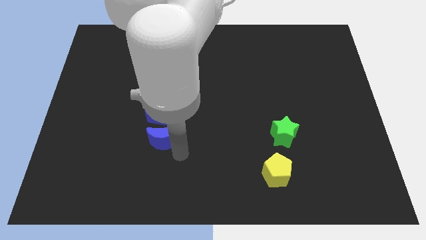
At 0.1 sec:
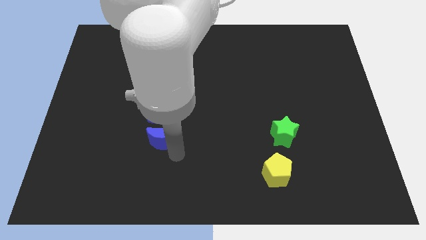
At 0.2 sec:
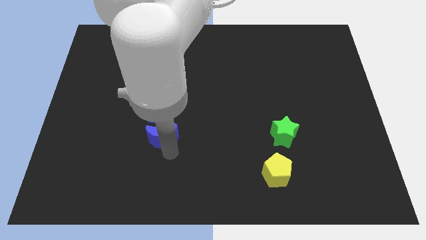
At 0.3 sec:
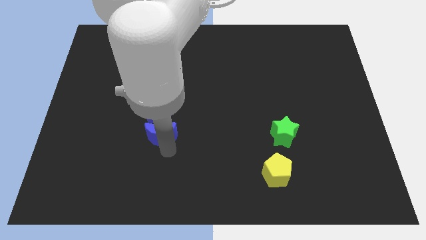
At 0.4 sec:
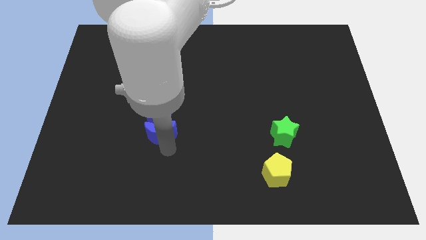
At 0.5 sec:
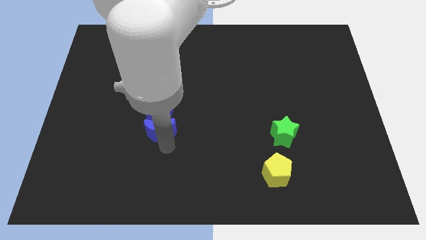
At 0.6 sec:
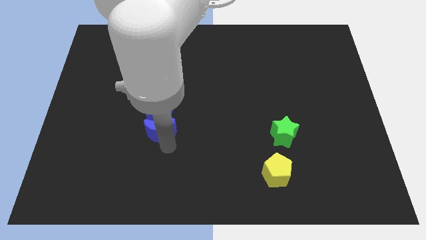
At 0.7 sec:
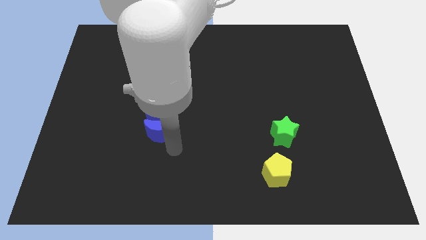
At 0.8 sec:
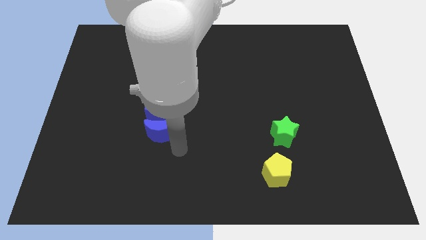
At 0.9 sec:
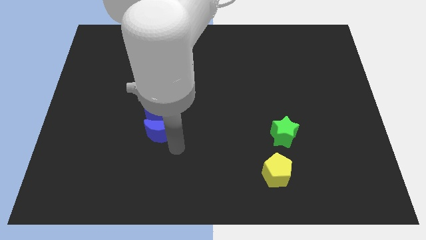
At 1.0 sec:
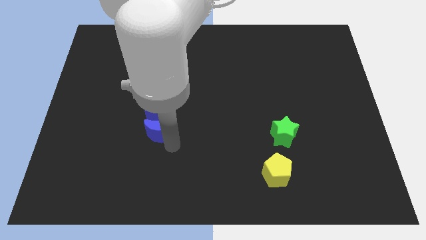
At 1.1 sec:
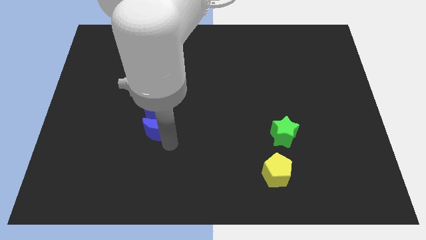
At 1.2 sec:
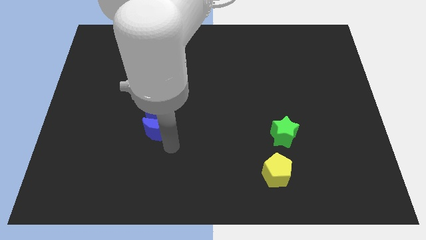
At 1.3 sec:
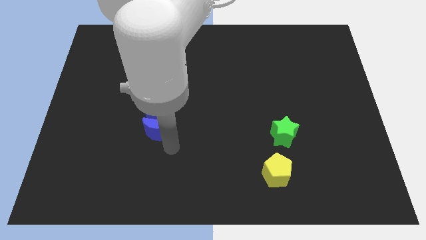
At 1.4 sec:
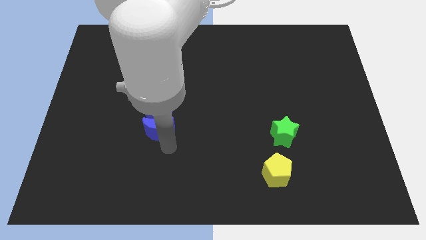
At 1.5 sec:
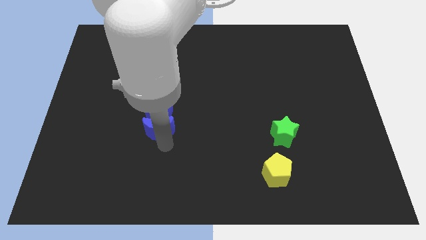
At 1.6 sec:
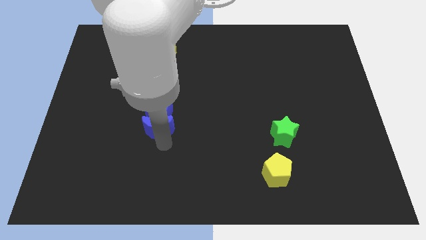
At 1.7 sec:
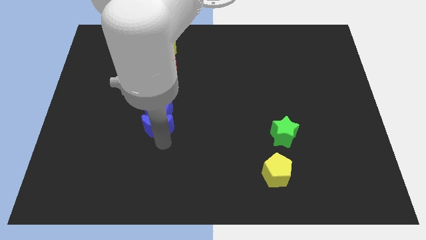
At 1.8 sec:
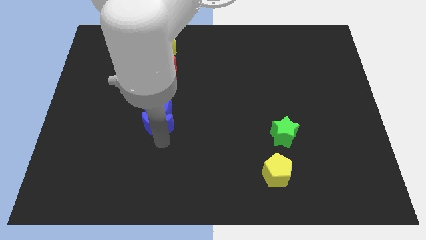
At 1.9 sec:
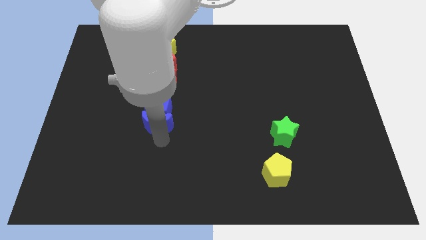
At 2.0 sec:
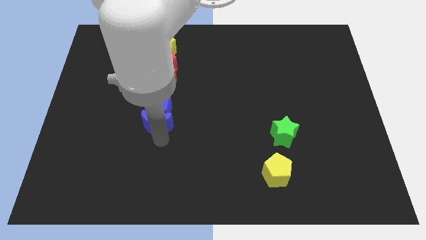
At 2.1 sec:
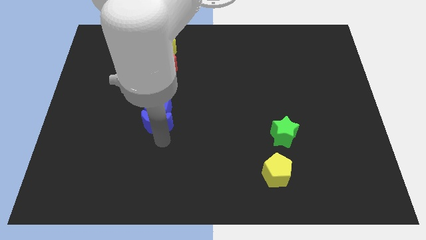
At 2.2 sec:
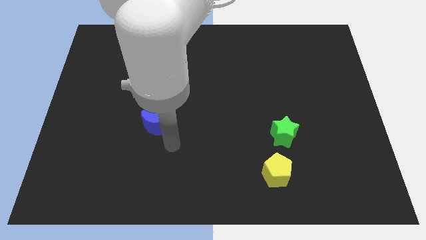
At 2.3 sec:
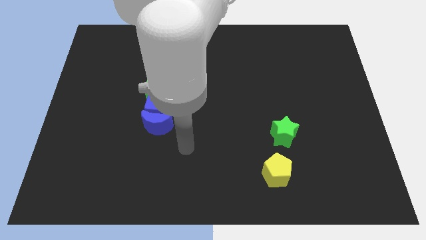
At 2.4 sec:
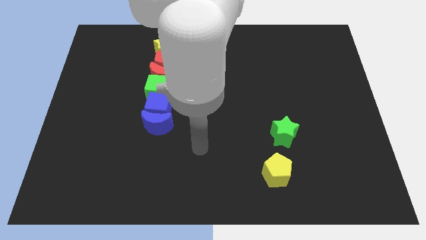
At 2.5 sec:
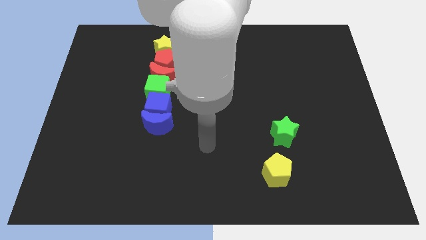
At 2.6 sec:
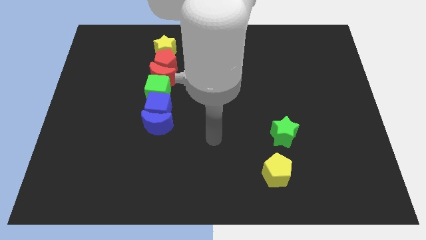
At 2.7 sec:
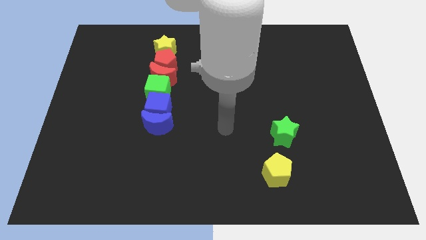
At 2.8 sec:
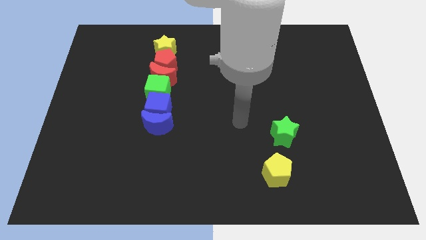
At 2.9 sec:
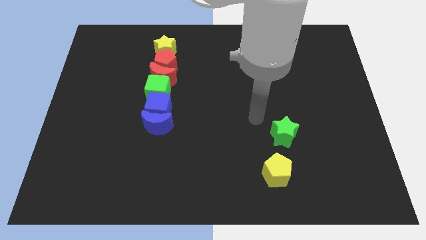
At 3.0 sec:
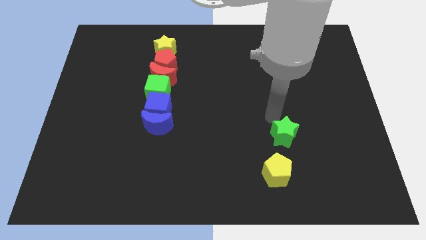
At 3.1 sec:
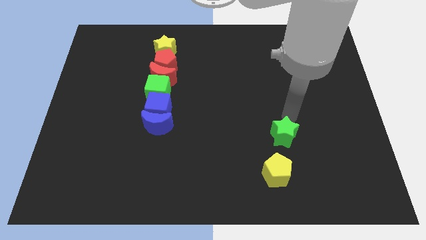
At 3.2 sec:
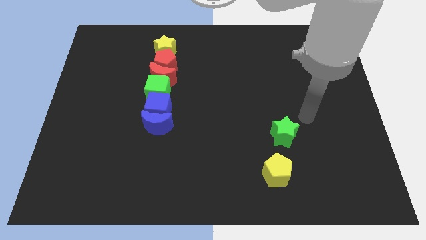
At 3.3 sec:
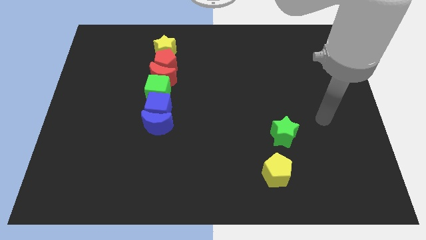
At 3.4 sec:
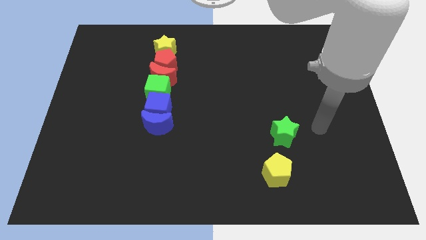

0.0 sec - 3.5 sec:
push the blue moon close to the blue cube

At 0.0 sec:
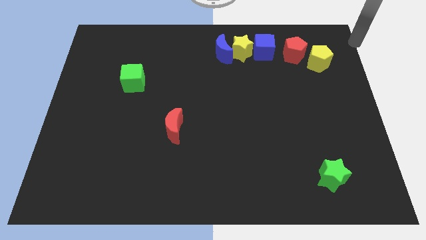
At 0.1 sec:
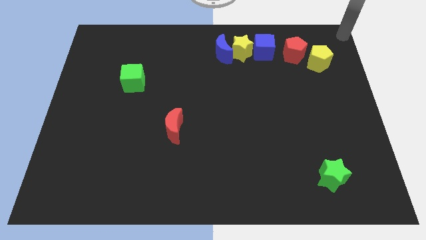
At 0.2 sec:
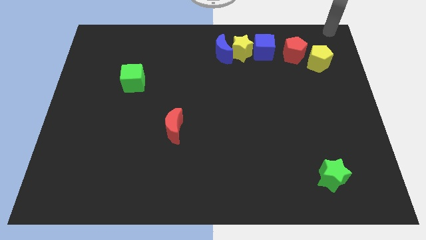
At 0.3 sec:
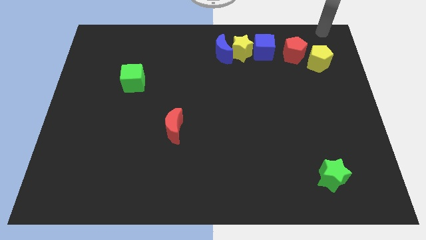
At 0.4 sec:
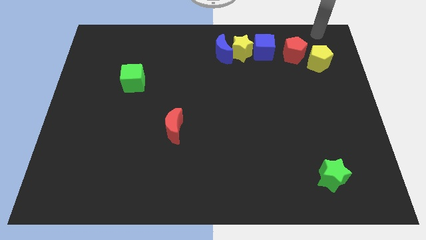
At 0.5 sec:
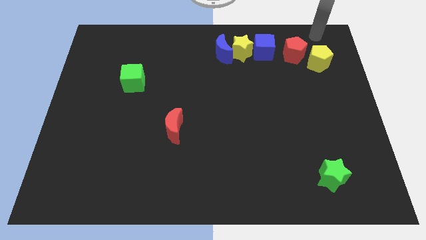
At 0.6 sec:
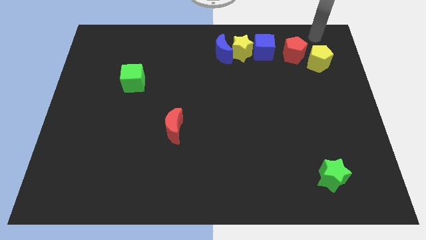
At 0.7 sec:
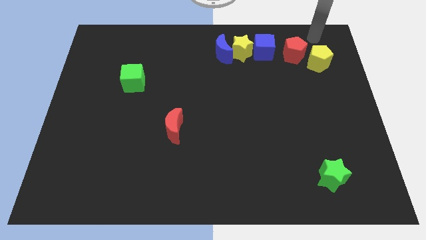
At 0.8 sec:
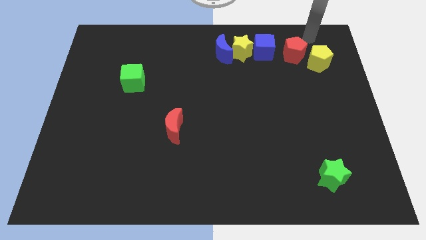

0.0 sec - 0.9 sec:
move your arm towards the red pentagon

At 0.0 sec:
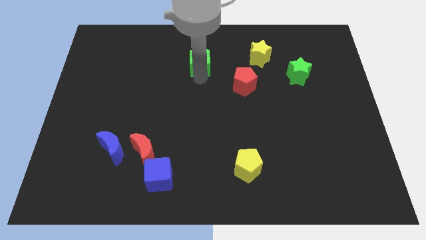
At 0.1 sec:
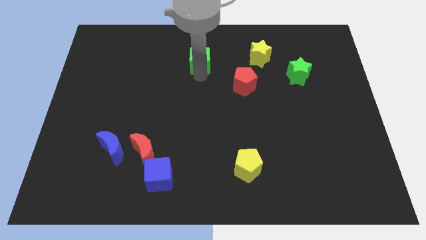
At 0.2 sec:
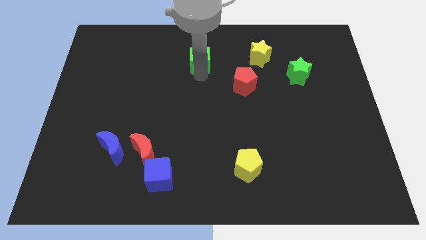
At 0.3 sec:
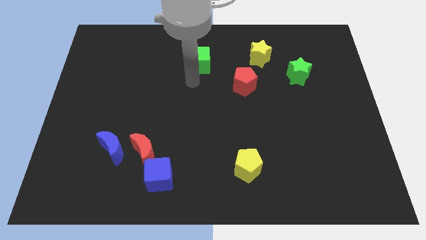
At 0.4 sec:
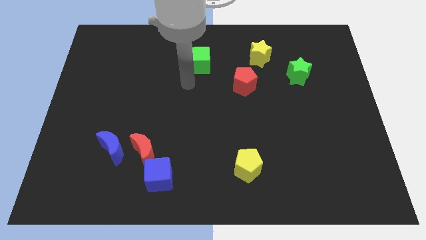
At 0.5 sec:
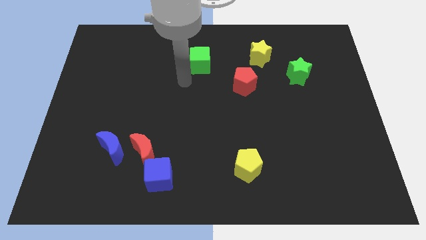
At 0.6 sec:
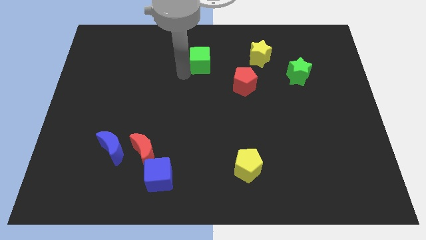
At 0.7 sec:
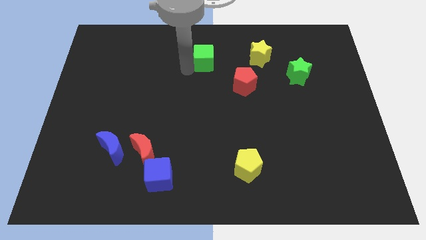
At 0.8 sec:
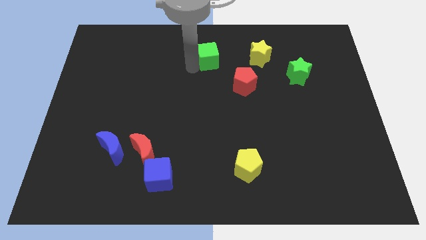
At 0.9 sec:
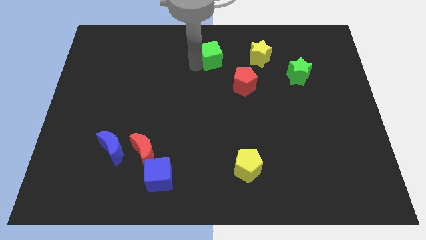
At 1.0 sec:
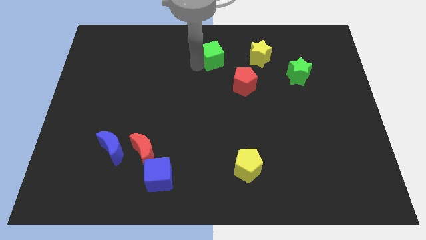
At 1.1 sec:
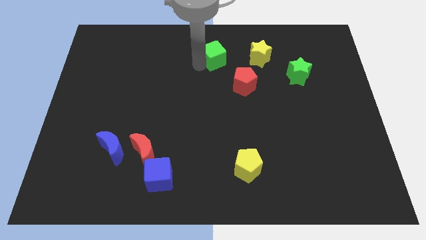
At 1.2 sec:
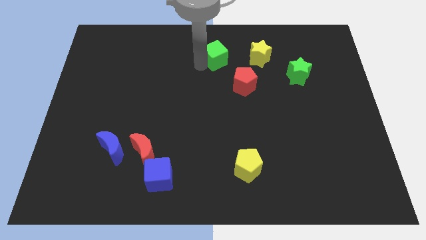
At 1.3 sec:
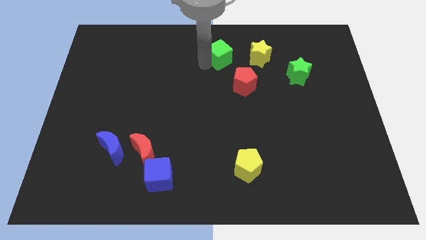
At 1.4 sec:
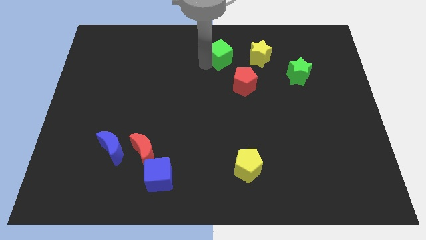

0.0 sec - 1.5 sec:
make a triangle by moving green cube

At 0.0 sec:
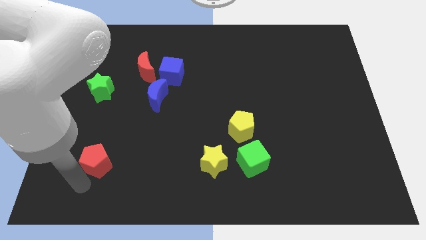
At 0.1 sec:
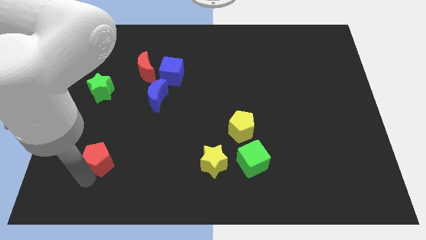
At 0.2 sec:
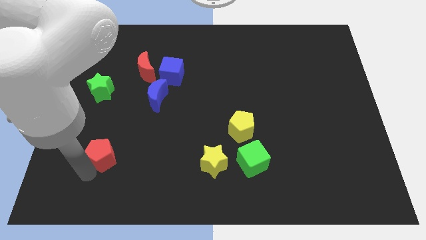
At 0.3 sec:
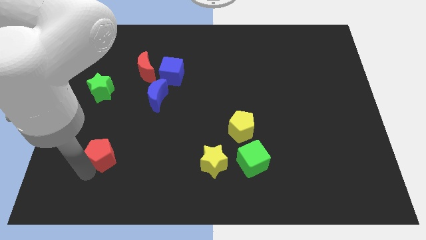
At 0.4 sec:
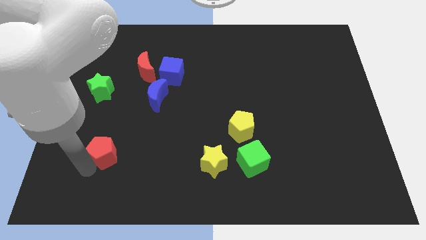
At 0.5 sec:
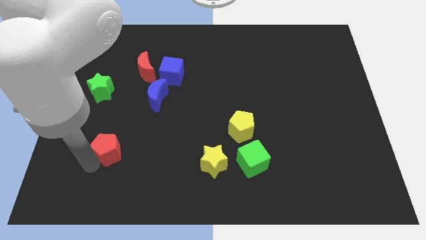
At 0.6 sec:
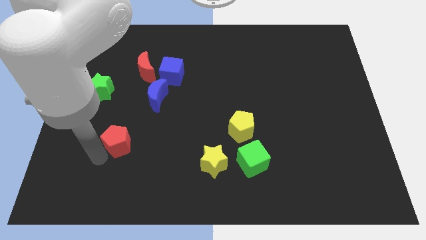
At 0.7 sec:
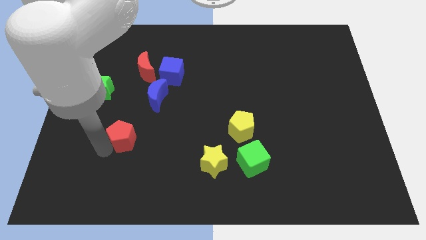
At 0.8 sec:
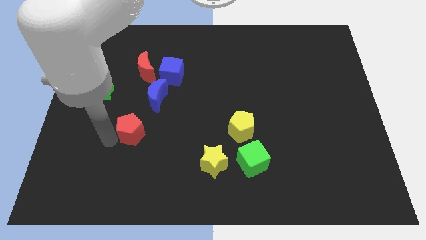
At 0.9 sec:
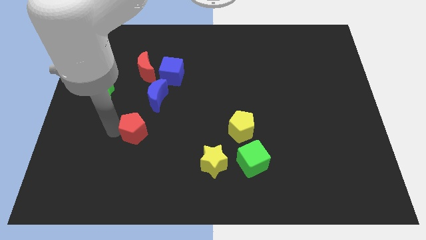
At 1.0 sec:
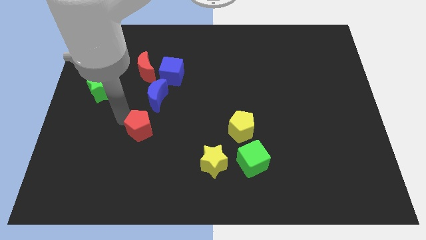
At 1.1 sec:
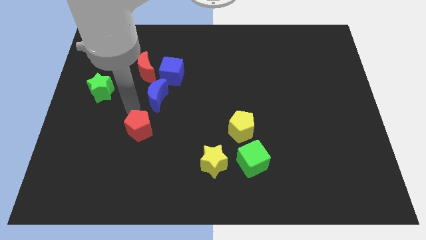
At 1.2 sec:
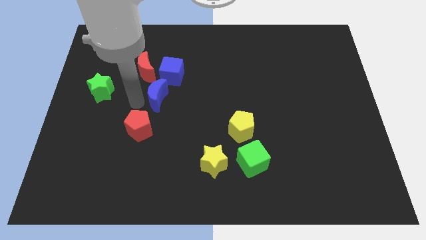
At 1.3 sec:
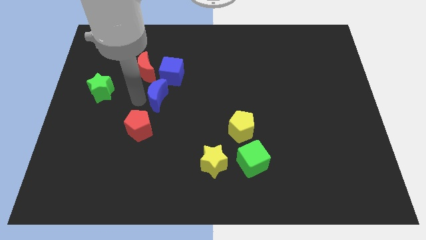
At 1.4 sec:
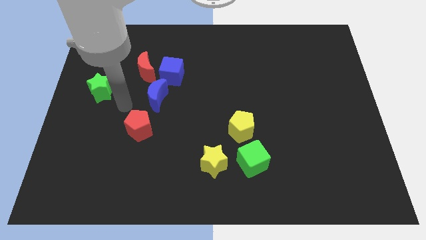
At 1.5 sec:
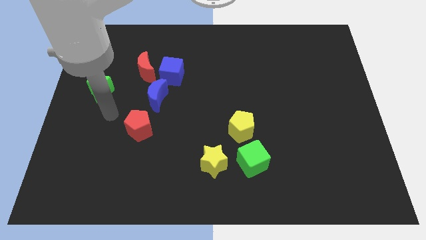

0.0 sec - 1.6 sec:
move the red pentagon near the blue crescent

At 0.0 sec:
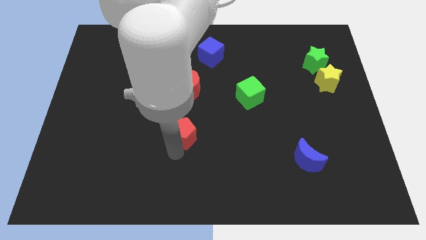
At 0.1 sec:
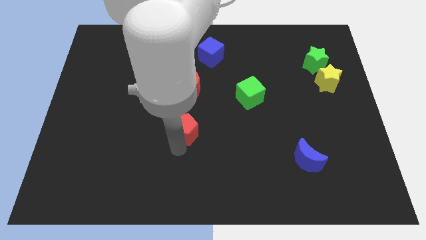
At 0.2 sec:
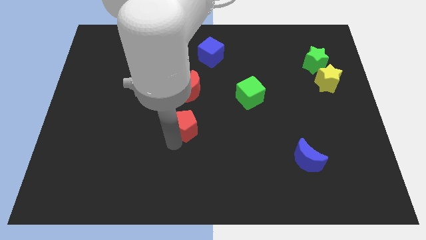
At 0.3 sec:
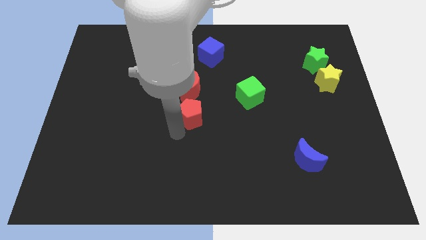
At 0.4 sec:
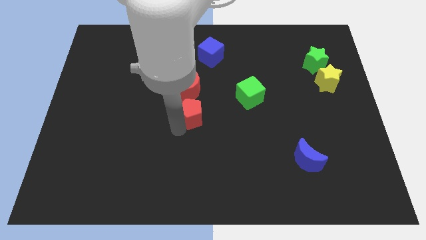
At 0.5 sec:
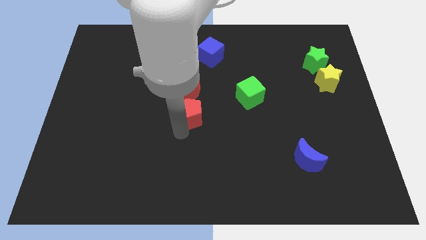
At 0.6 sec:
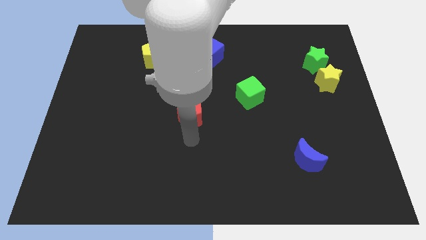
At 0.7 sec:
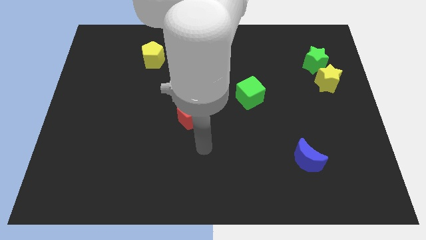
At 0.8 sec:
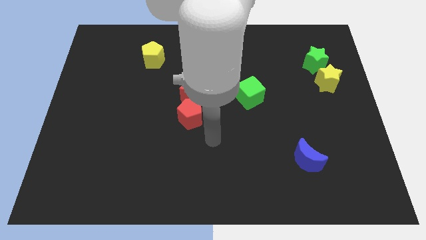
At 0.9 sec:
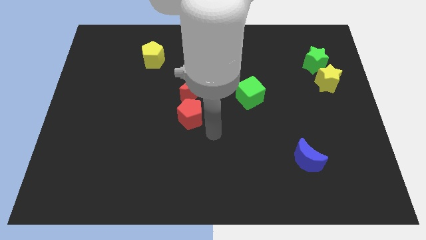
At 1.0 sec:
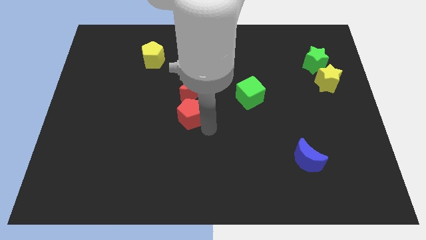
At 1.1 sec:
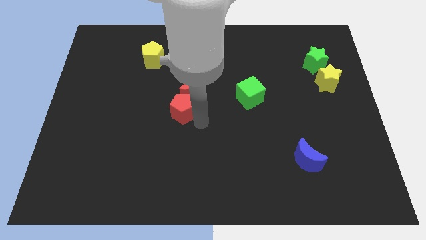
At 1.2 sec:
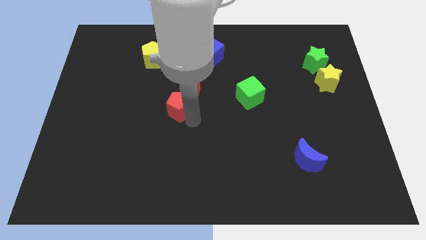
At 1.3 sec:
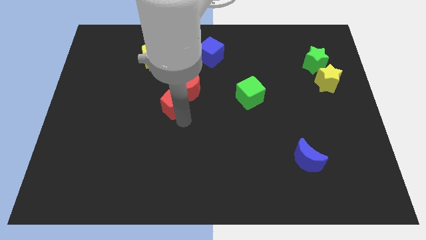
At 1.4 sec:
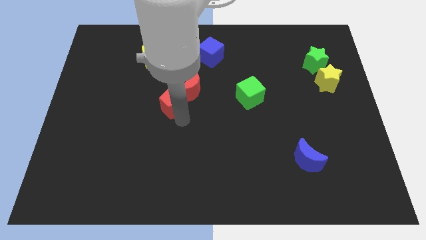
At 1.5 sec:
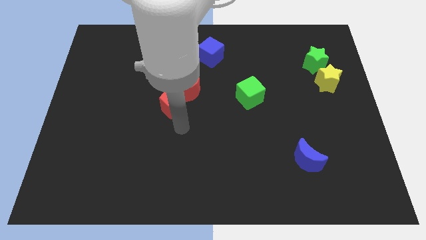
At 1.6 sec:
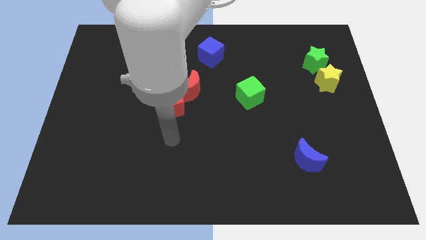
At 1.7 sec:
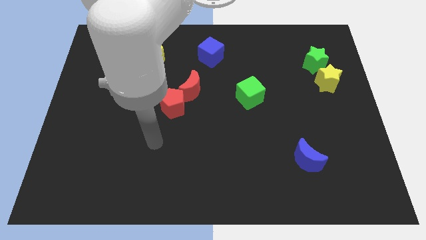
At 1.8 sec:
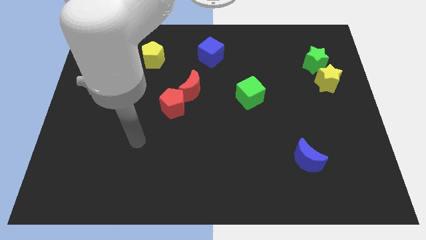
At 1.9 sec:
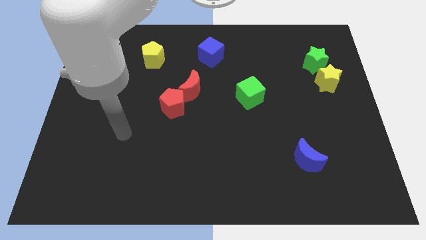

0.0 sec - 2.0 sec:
push the red pentagon close to the red crescent
